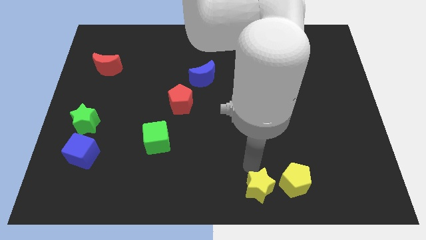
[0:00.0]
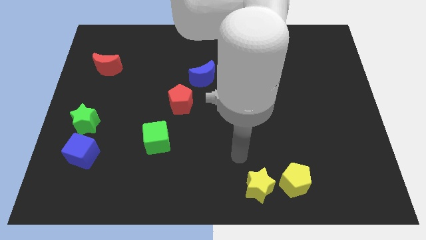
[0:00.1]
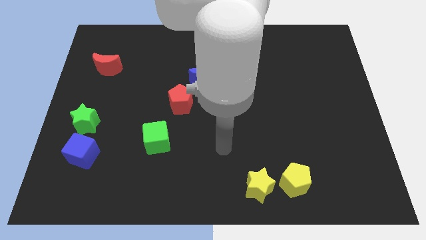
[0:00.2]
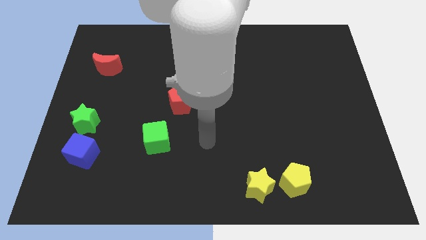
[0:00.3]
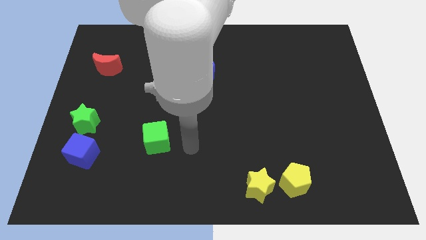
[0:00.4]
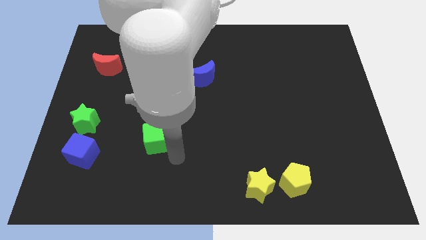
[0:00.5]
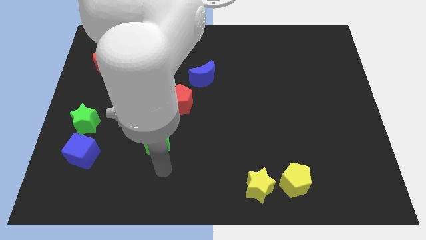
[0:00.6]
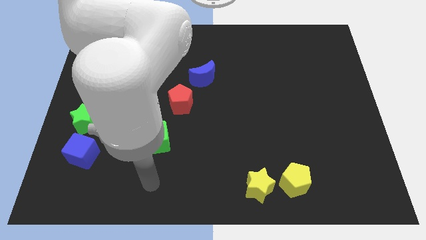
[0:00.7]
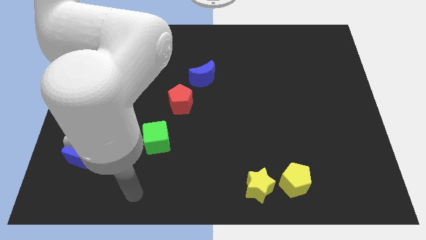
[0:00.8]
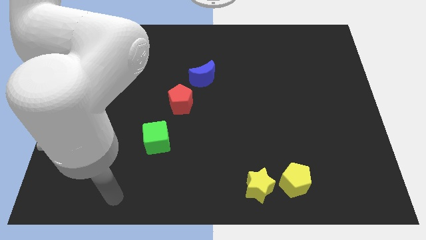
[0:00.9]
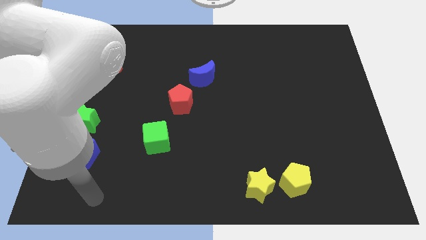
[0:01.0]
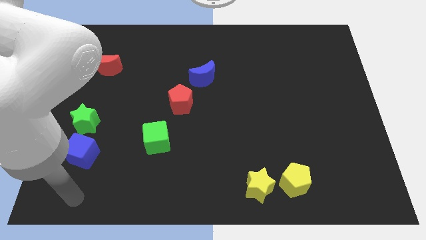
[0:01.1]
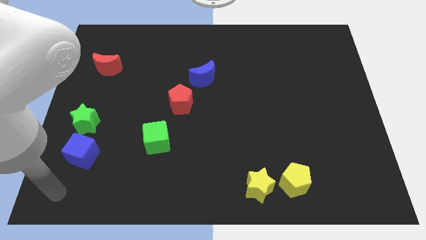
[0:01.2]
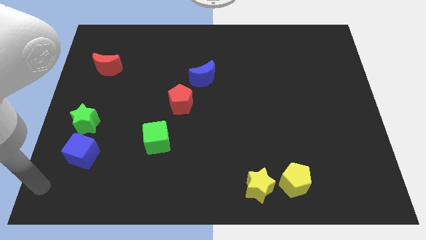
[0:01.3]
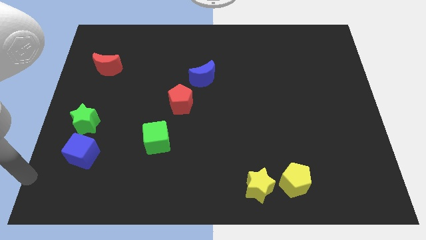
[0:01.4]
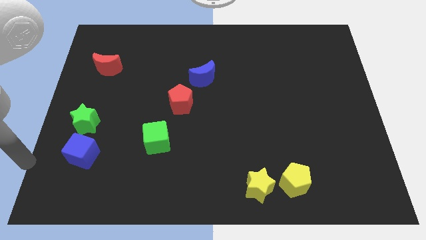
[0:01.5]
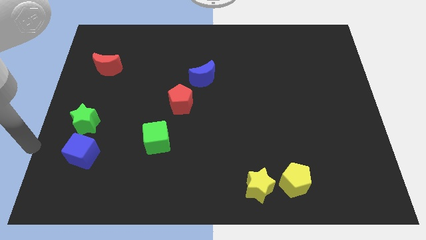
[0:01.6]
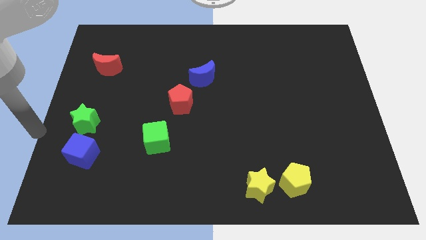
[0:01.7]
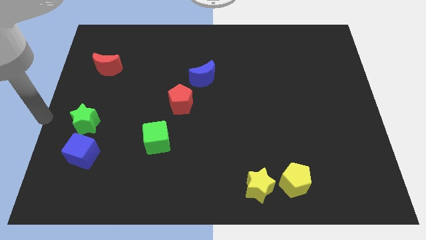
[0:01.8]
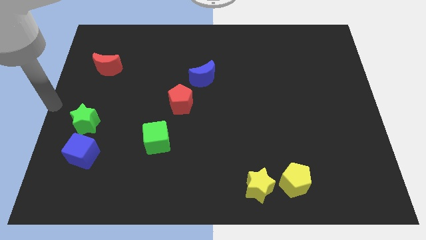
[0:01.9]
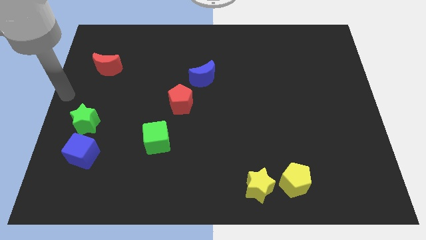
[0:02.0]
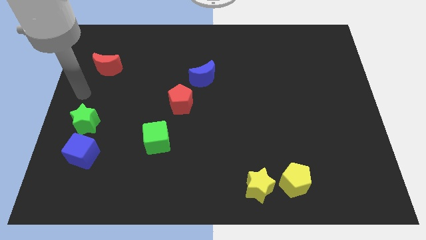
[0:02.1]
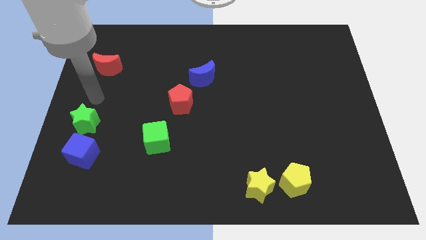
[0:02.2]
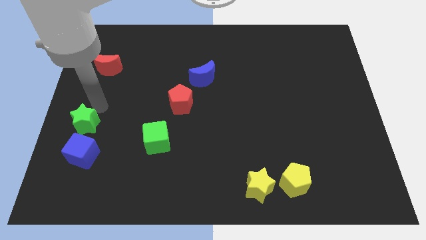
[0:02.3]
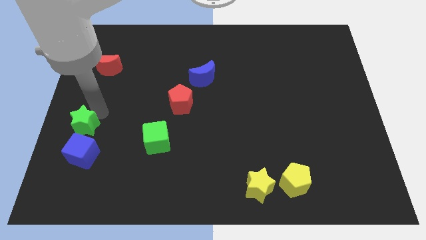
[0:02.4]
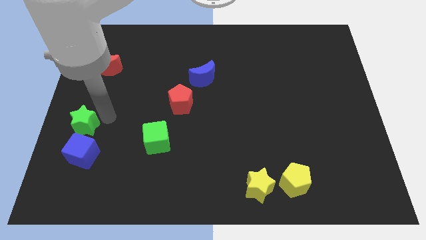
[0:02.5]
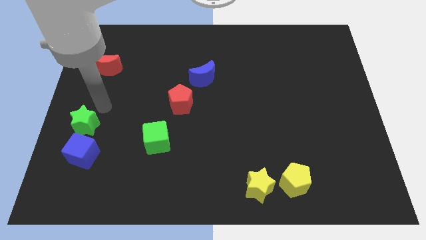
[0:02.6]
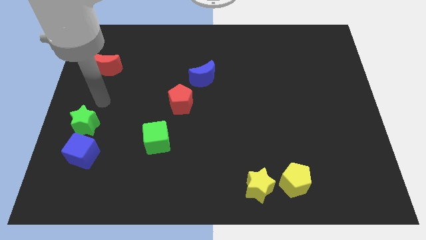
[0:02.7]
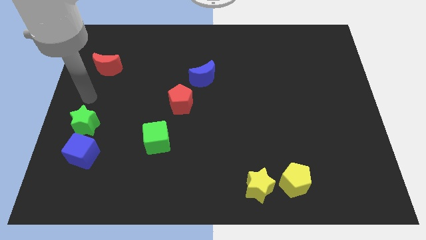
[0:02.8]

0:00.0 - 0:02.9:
move the arm to the top right to the green star

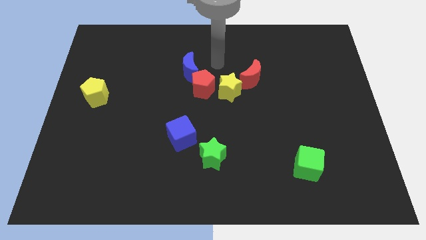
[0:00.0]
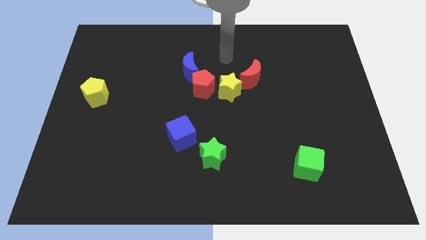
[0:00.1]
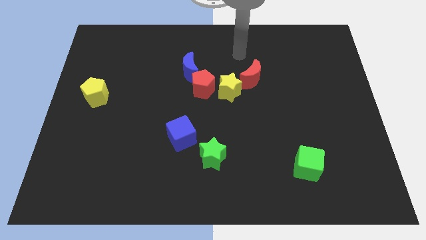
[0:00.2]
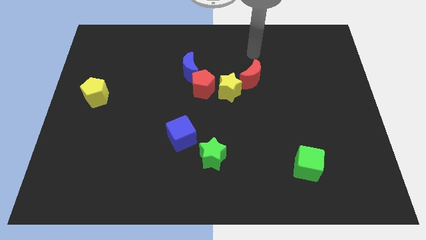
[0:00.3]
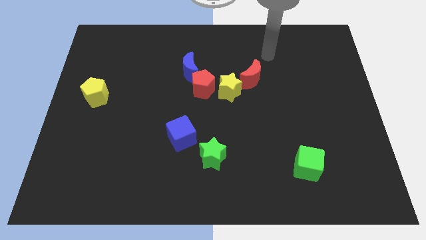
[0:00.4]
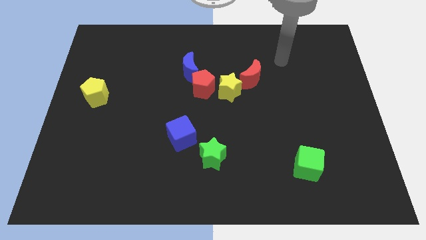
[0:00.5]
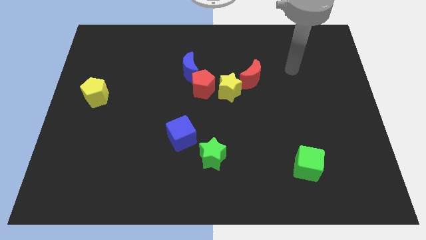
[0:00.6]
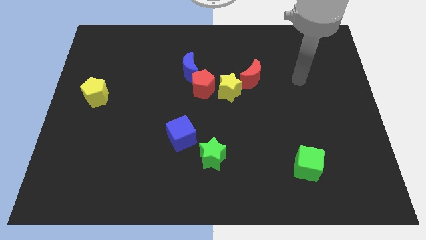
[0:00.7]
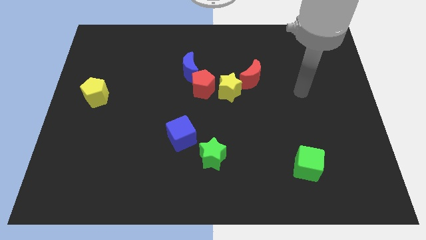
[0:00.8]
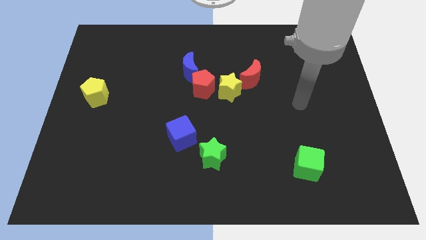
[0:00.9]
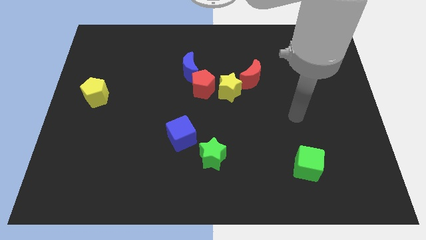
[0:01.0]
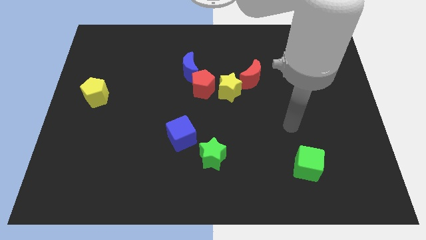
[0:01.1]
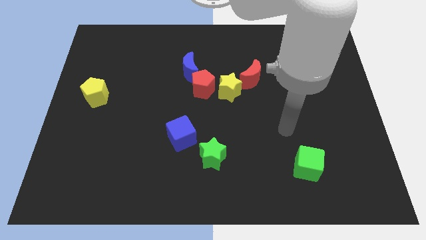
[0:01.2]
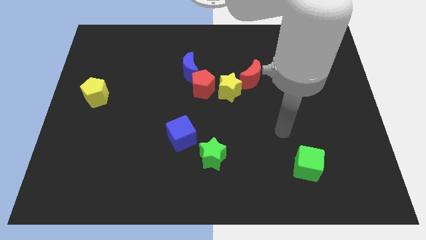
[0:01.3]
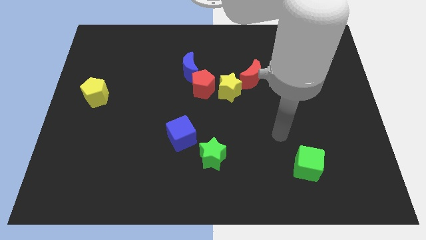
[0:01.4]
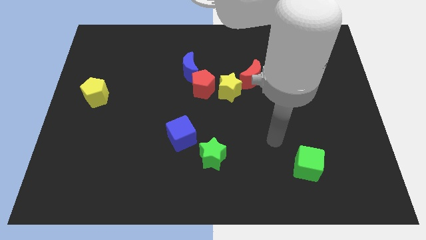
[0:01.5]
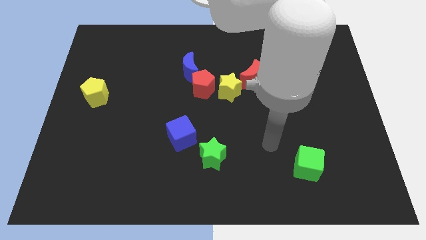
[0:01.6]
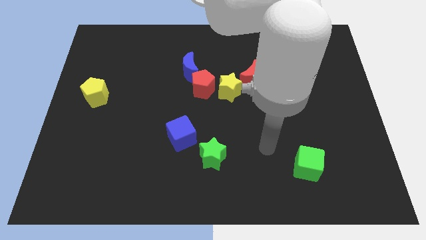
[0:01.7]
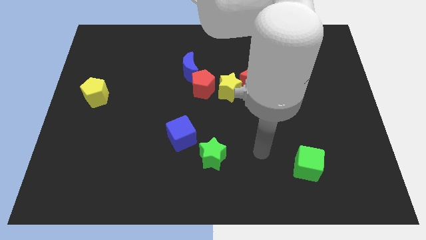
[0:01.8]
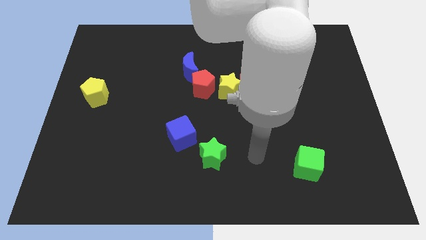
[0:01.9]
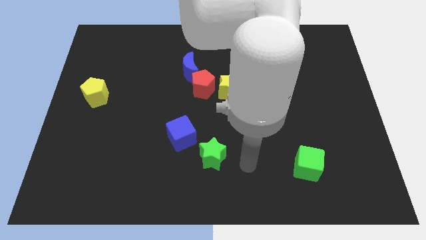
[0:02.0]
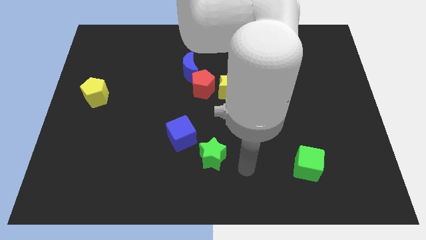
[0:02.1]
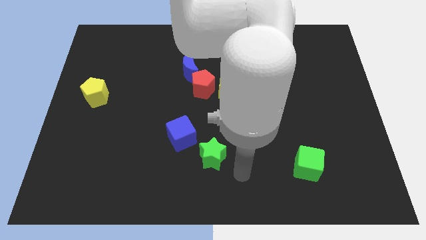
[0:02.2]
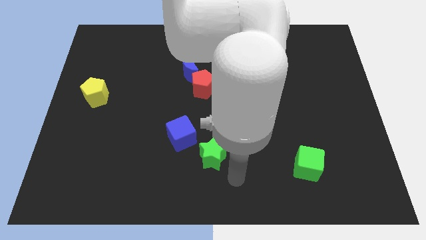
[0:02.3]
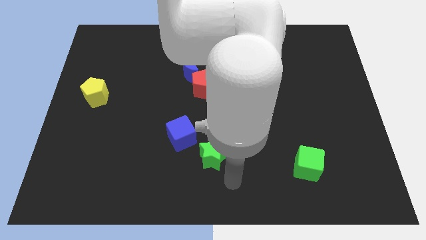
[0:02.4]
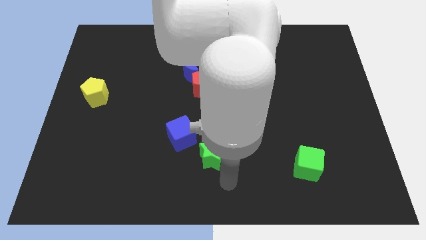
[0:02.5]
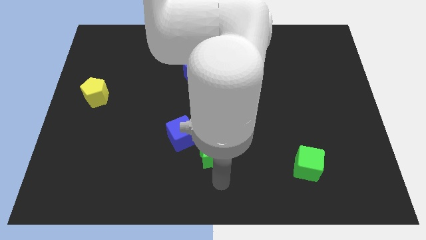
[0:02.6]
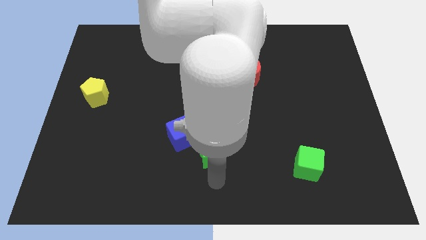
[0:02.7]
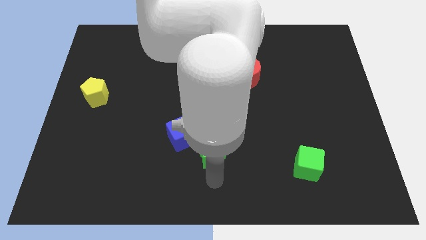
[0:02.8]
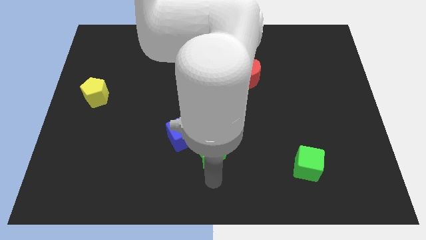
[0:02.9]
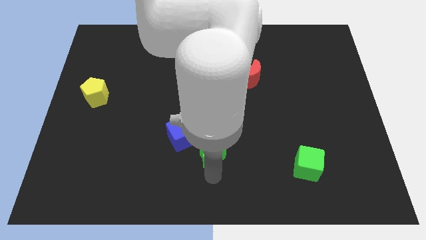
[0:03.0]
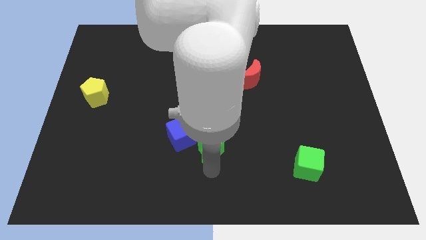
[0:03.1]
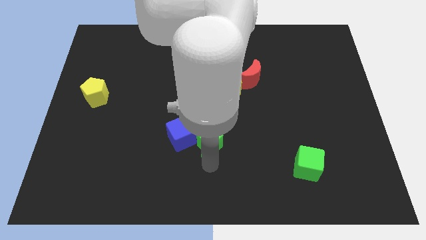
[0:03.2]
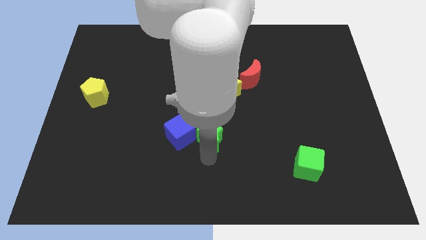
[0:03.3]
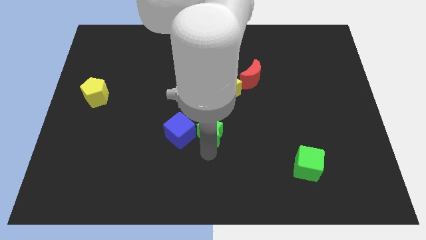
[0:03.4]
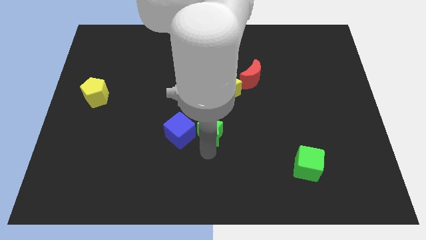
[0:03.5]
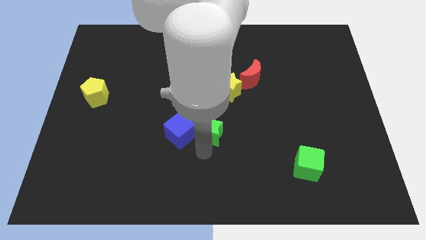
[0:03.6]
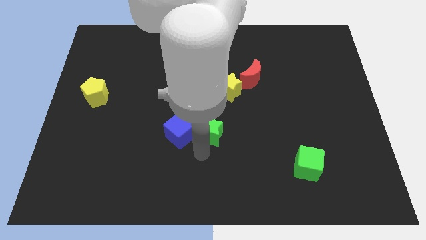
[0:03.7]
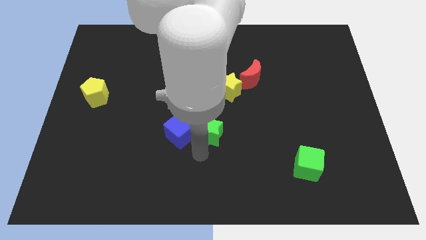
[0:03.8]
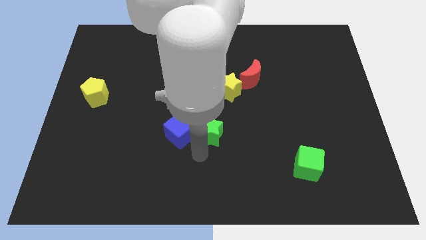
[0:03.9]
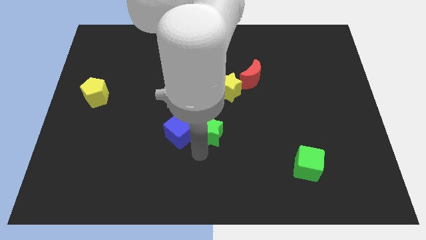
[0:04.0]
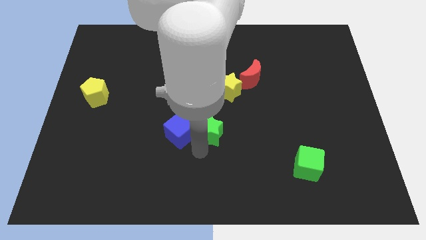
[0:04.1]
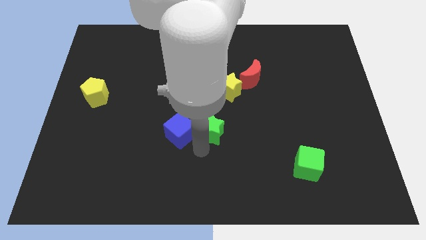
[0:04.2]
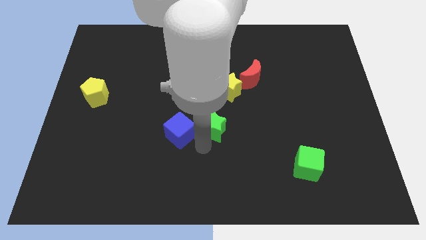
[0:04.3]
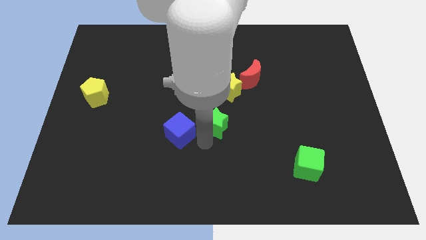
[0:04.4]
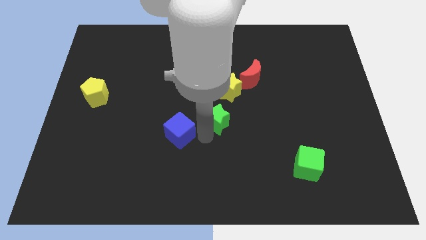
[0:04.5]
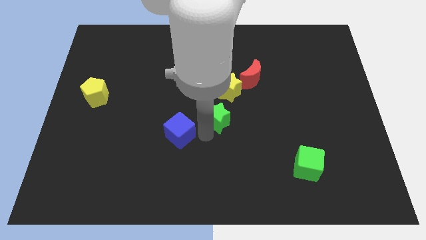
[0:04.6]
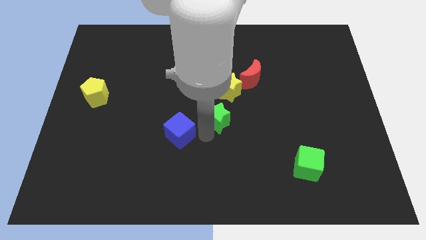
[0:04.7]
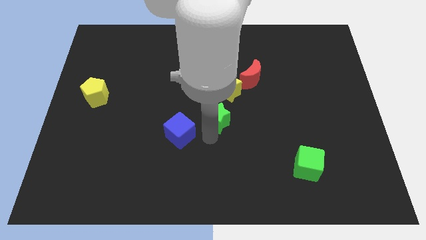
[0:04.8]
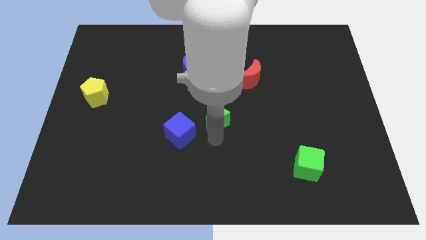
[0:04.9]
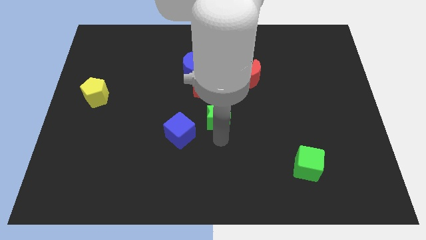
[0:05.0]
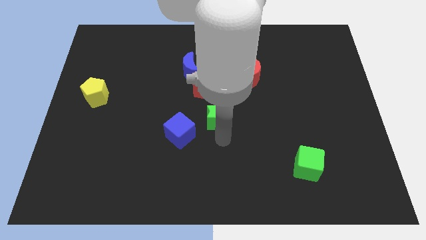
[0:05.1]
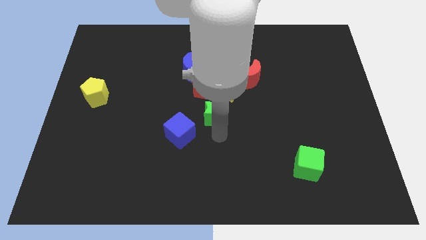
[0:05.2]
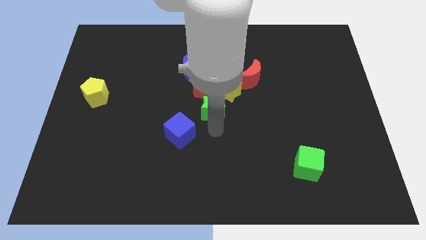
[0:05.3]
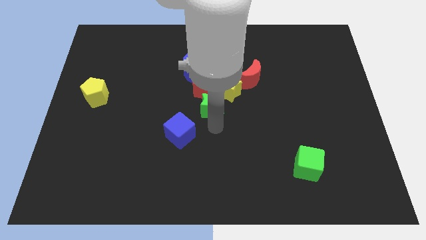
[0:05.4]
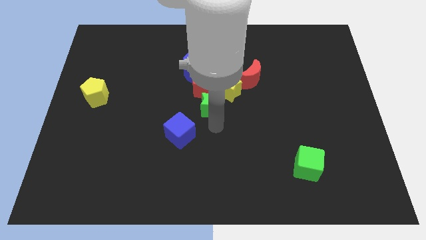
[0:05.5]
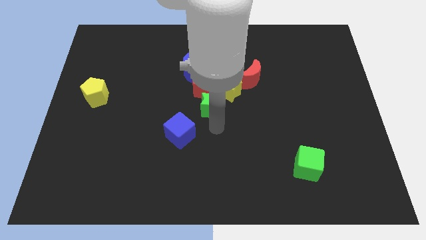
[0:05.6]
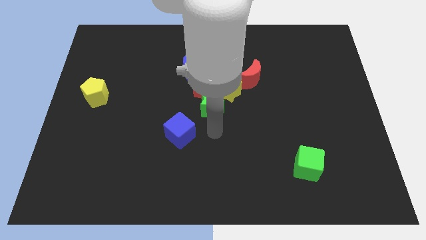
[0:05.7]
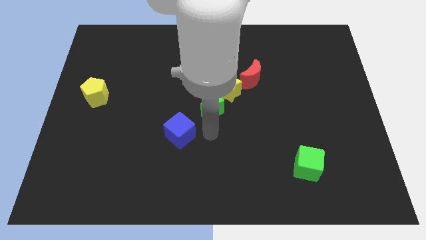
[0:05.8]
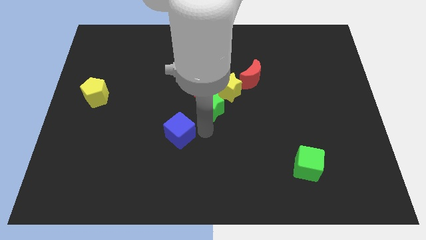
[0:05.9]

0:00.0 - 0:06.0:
move green star into red pentagon and yellow star
